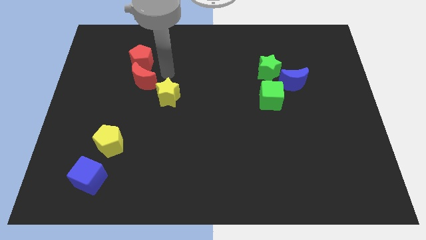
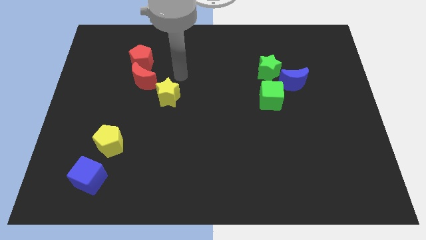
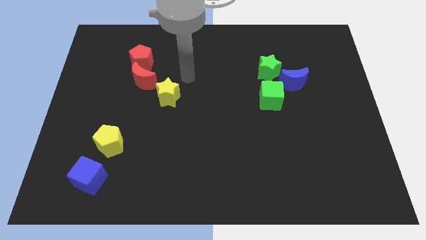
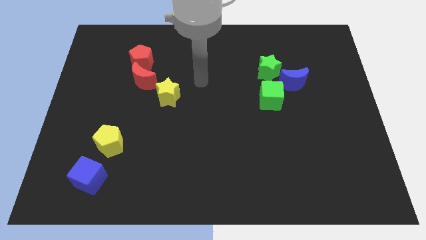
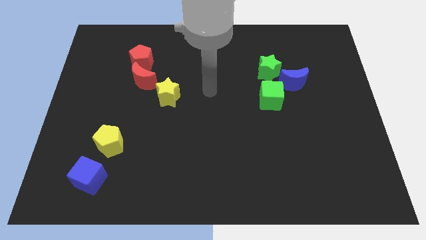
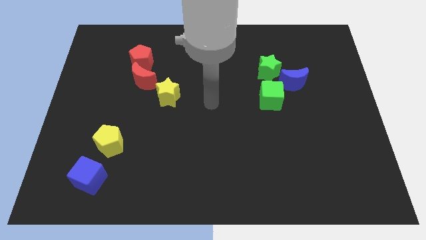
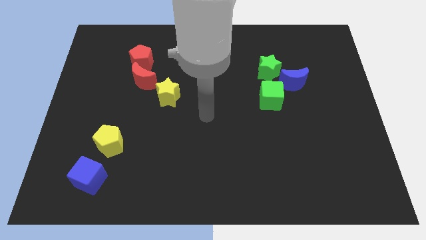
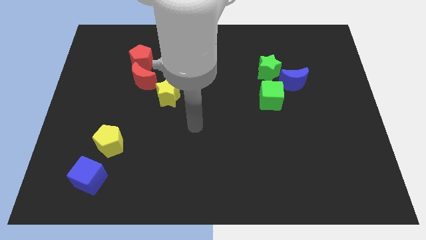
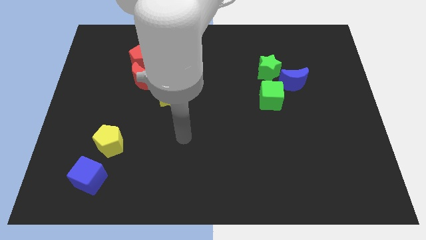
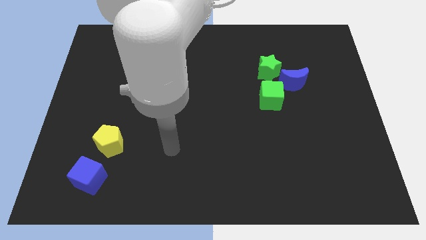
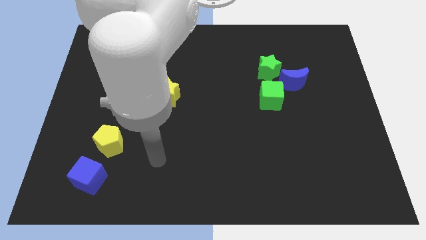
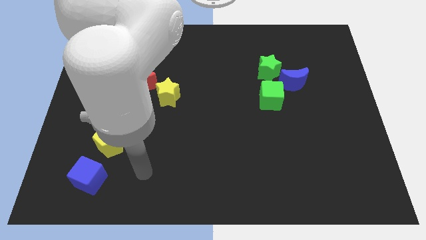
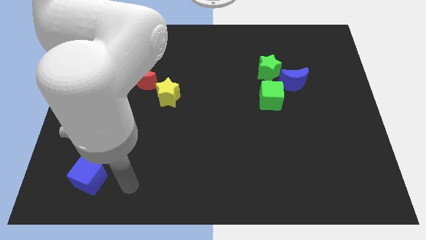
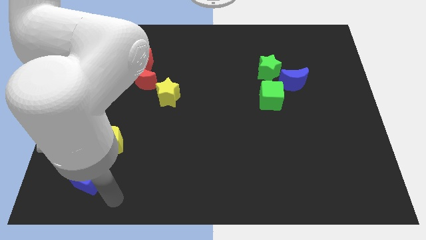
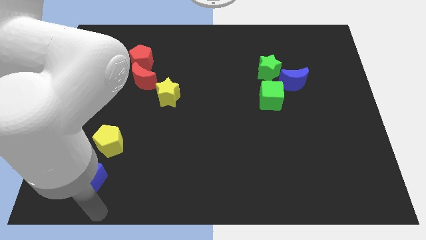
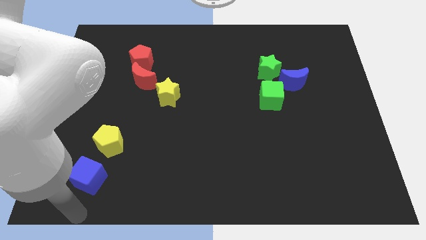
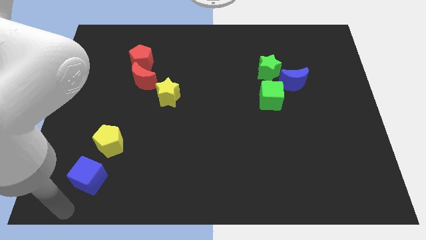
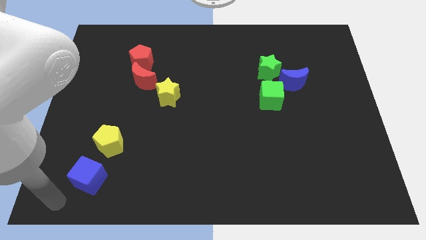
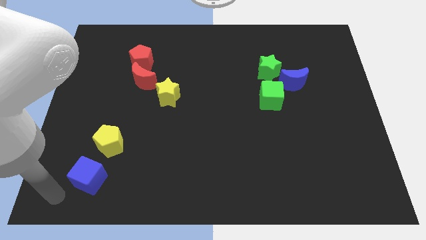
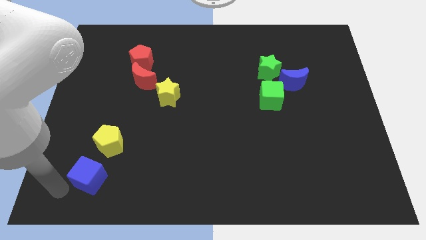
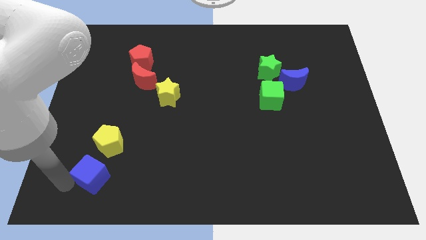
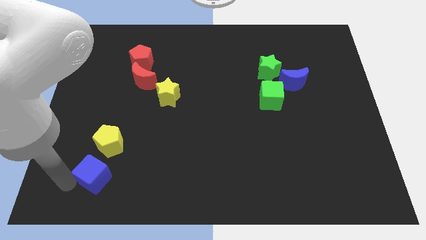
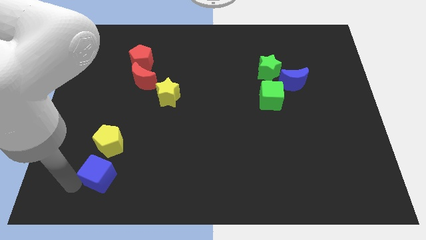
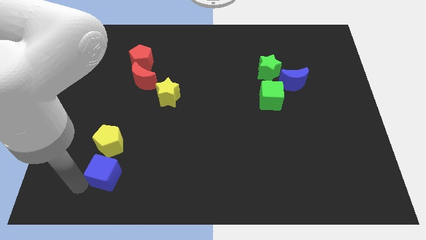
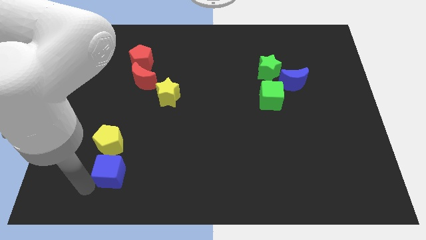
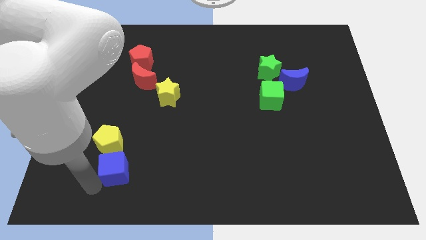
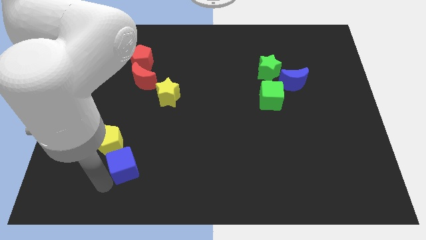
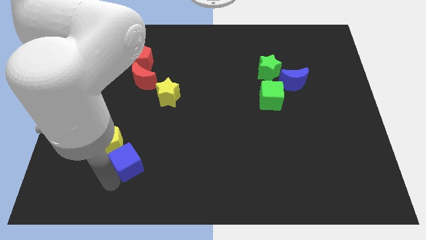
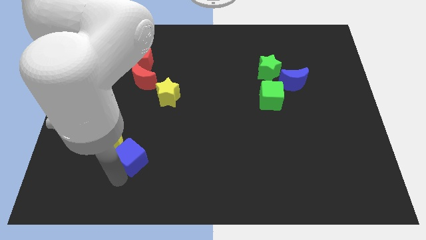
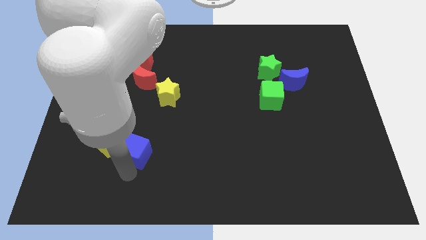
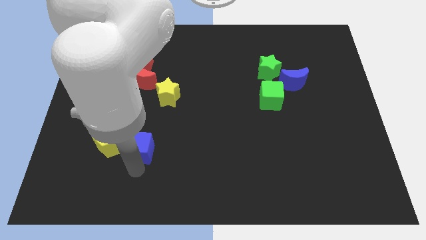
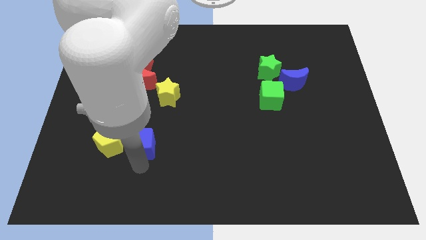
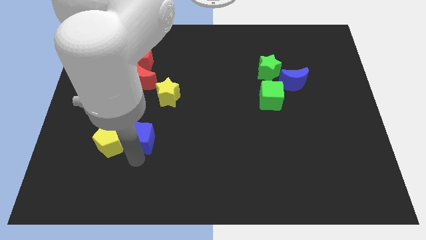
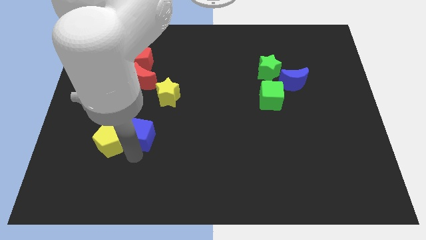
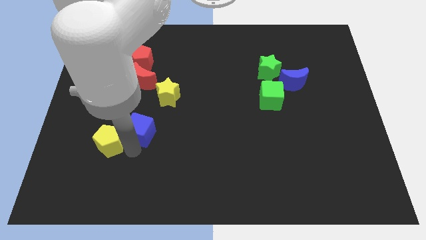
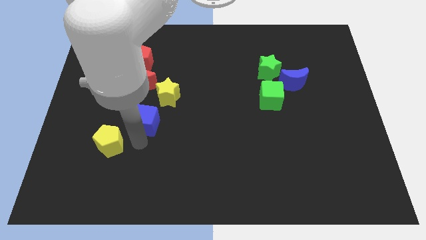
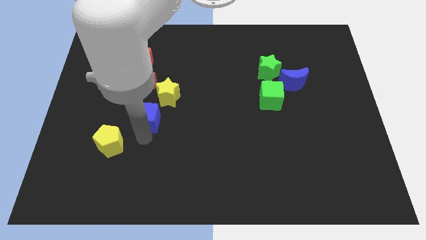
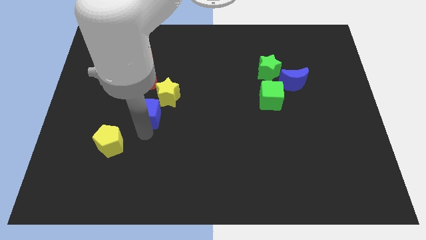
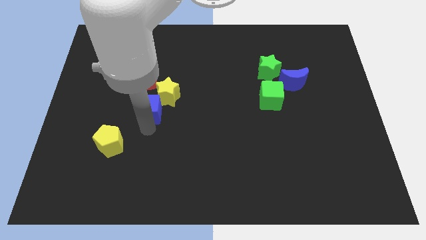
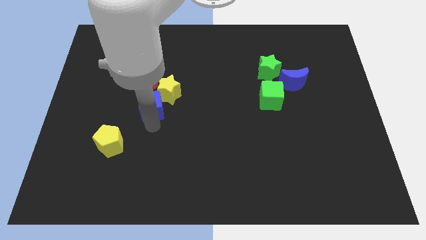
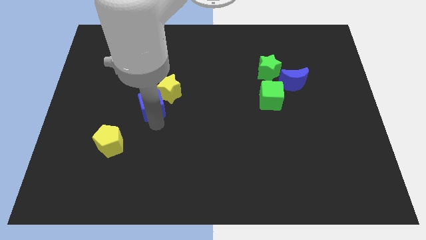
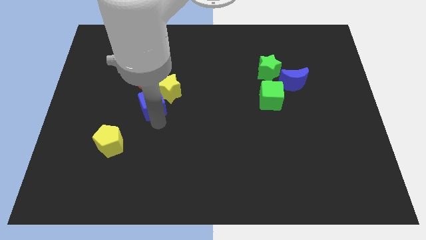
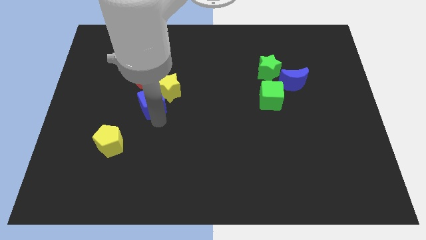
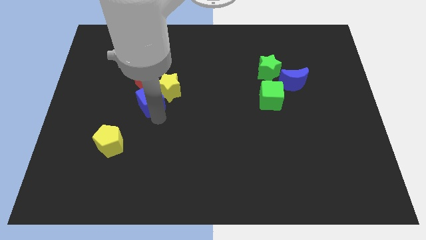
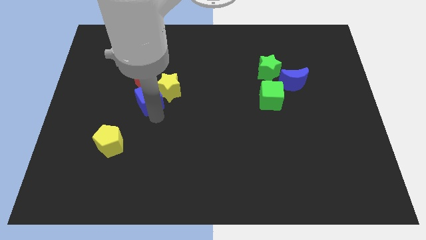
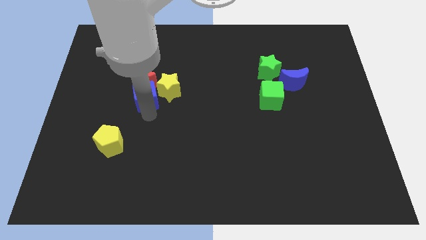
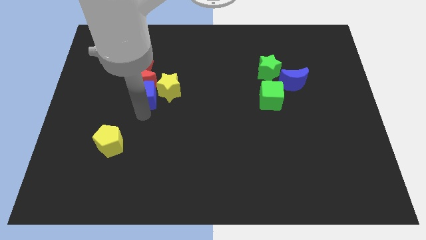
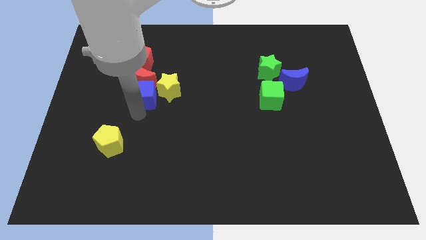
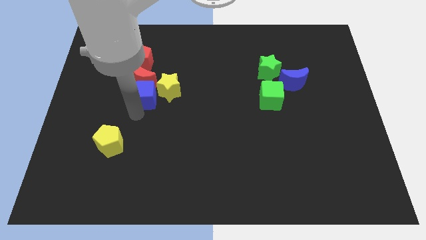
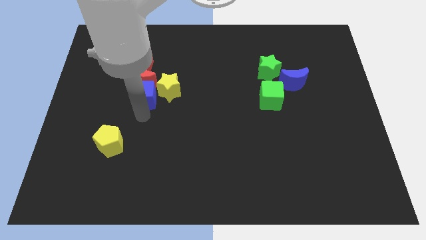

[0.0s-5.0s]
push the blue cube down to the red moon

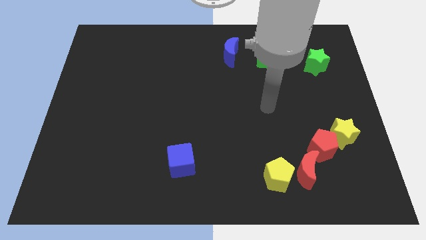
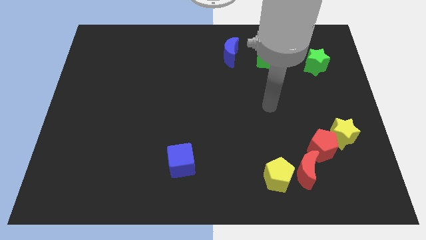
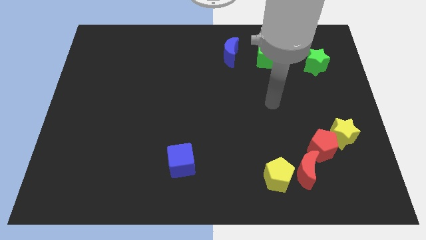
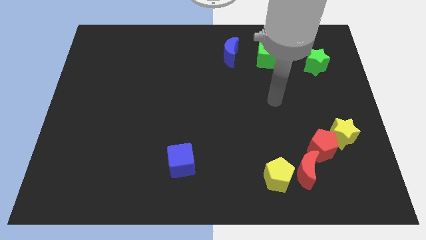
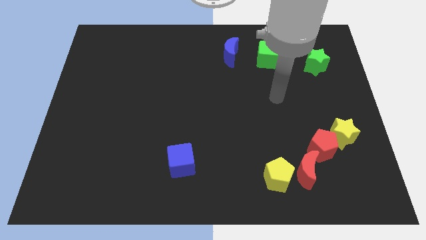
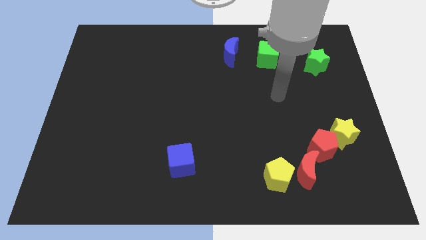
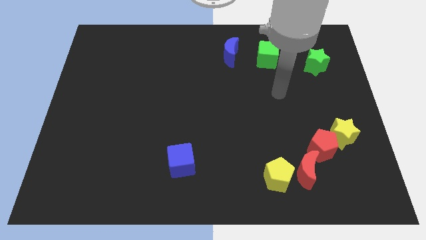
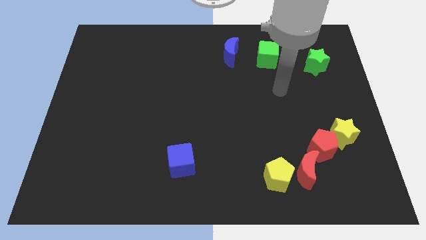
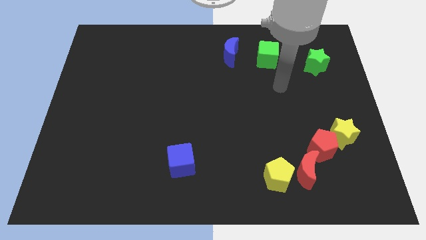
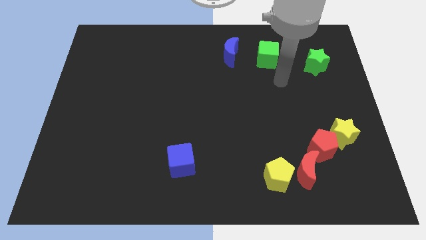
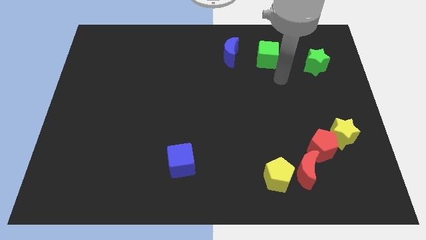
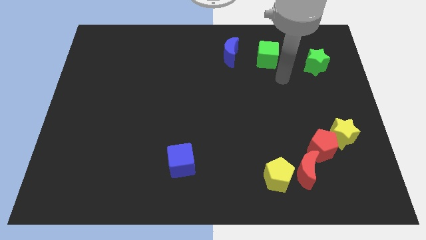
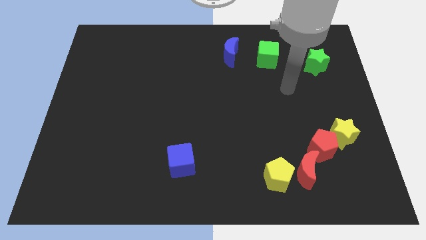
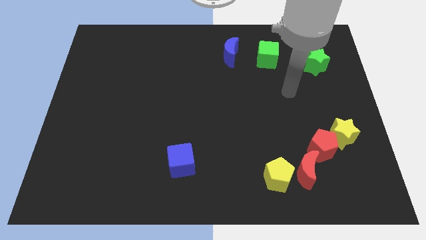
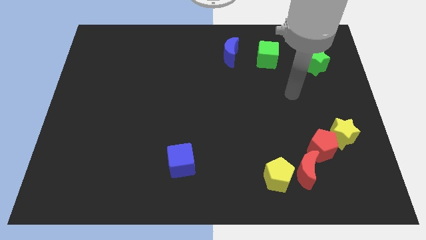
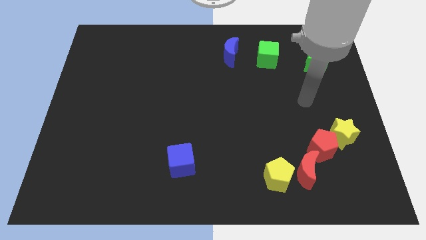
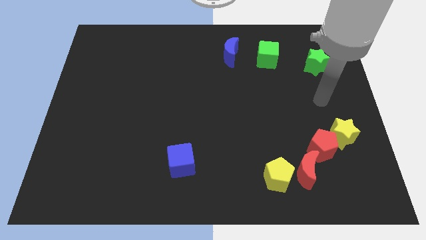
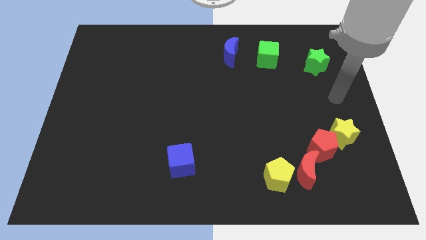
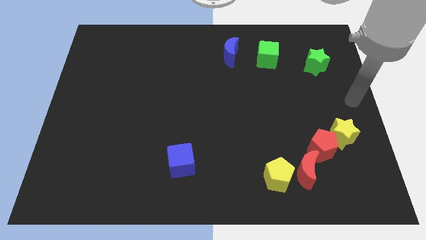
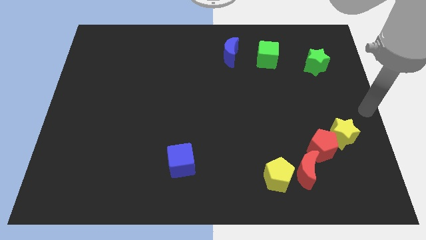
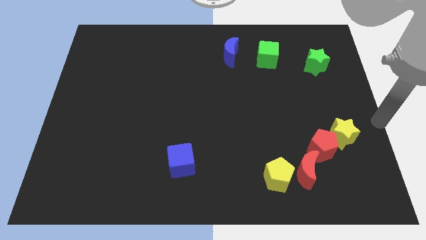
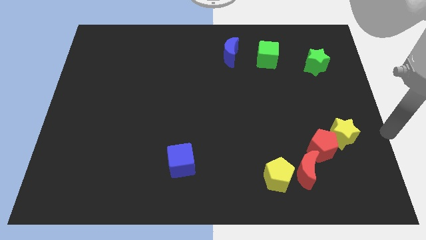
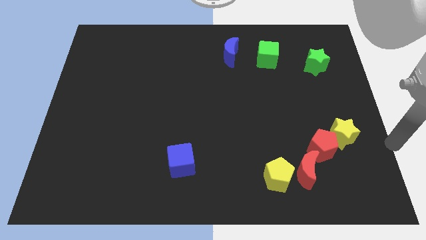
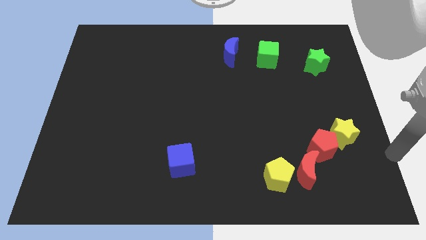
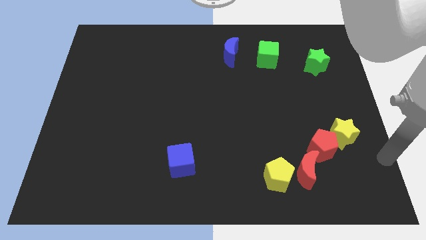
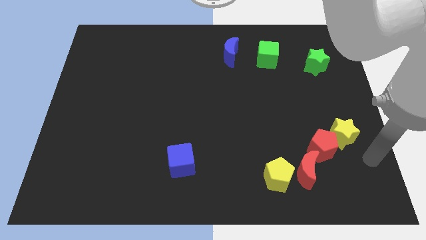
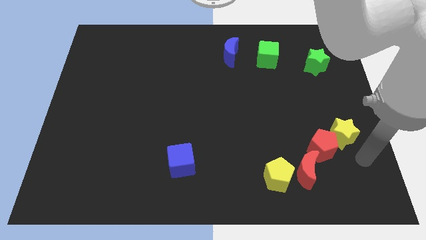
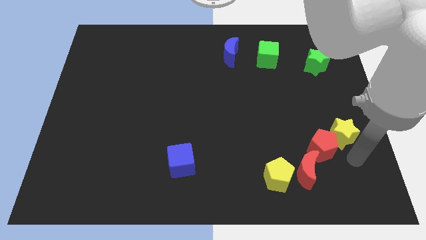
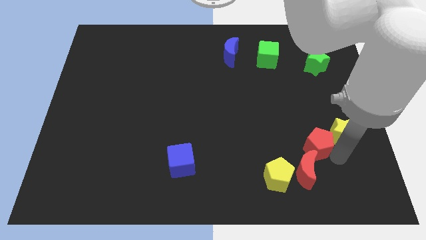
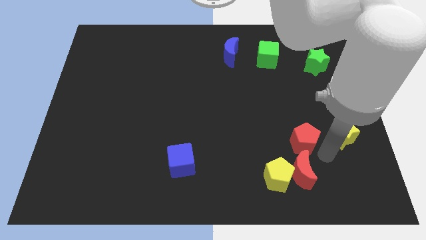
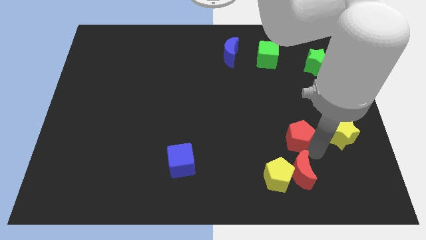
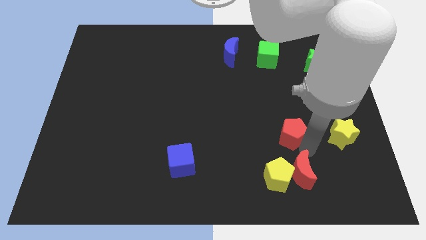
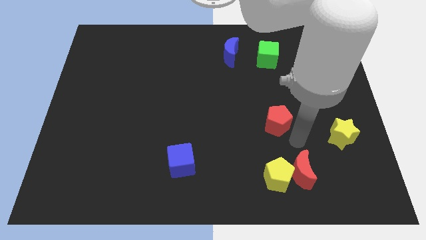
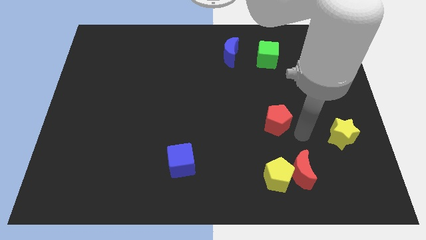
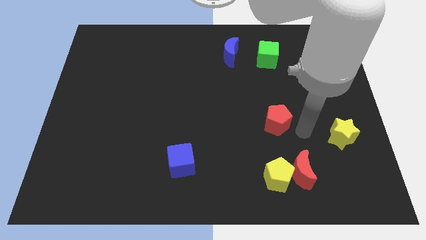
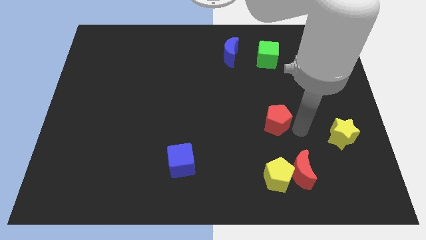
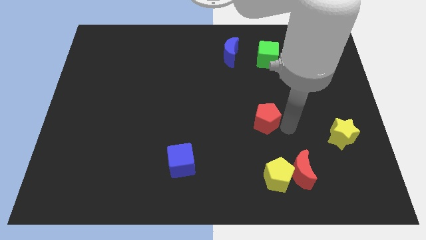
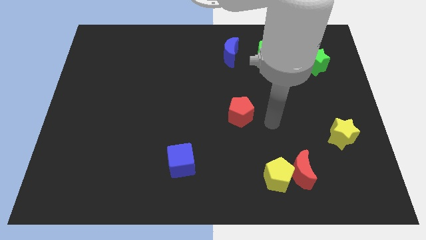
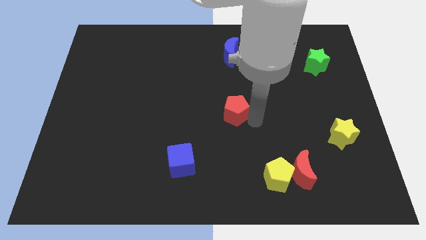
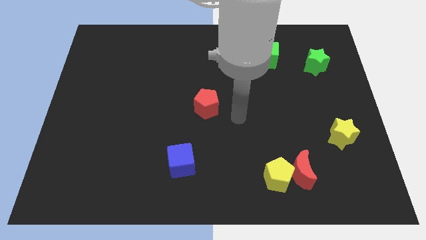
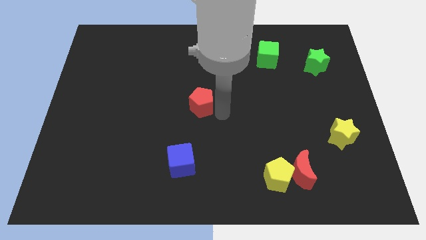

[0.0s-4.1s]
place the red pentagon to the center of the board
